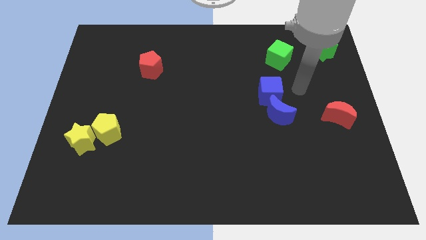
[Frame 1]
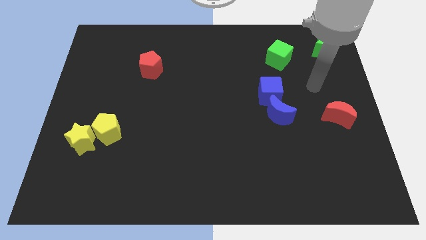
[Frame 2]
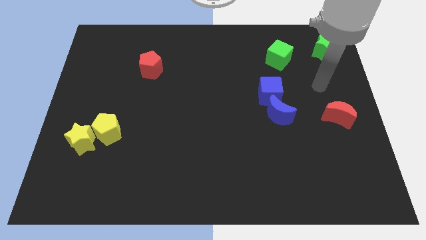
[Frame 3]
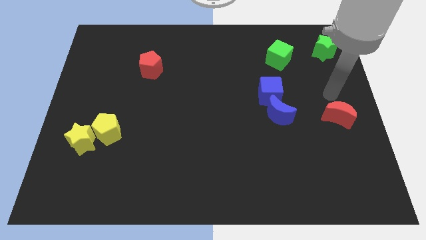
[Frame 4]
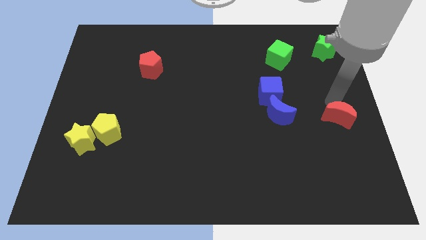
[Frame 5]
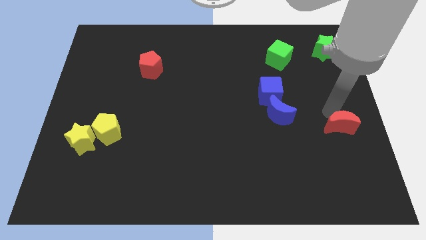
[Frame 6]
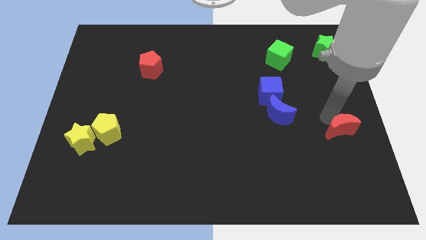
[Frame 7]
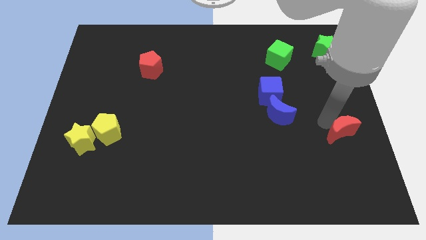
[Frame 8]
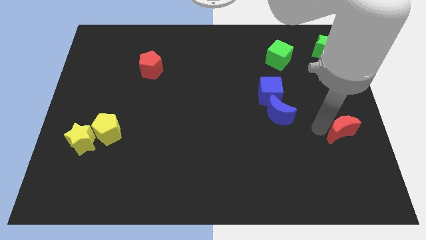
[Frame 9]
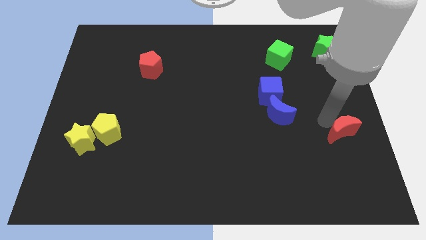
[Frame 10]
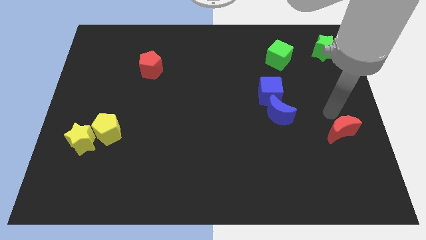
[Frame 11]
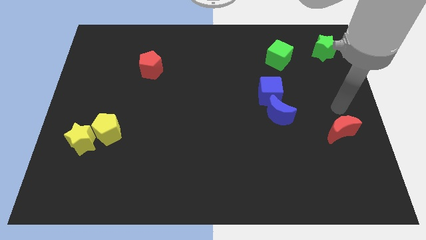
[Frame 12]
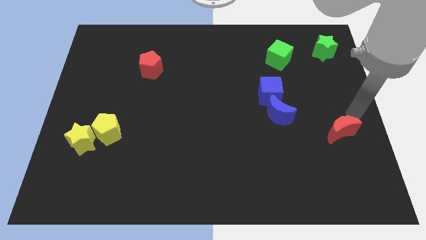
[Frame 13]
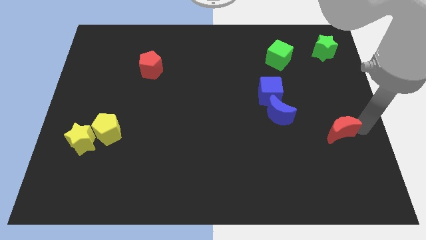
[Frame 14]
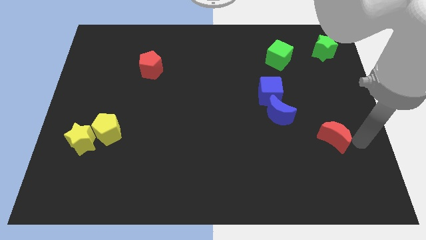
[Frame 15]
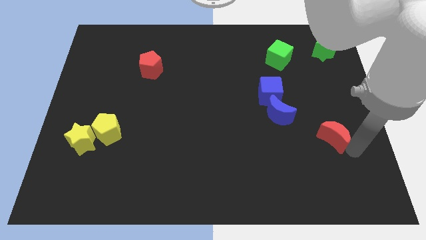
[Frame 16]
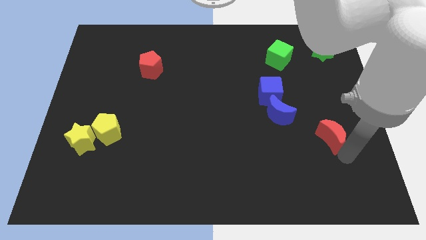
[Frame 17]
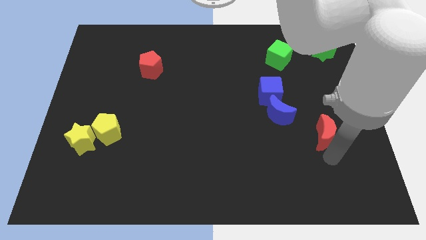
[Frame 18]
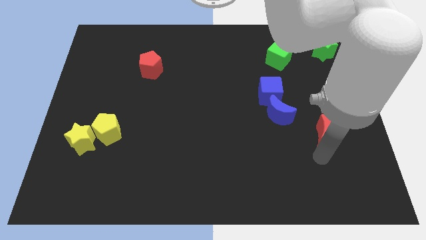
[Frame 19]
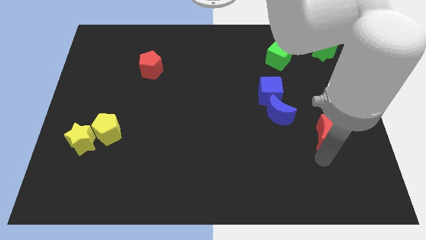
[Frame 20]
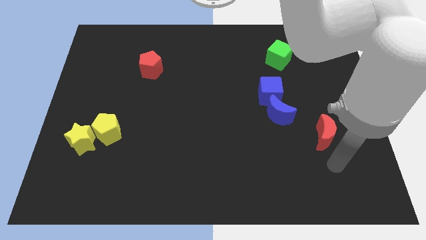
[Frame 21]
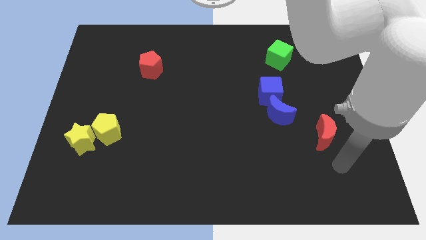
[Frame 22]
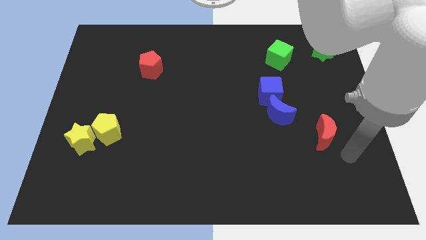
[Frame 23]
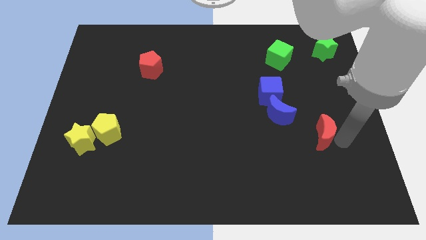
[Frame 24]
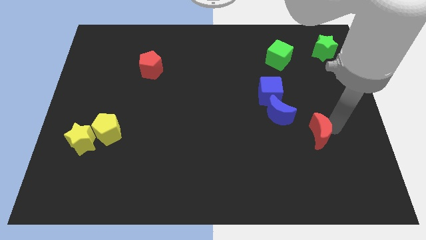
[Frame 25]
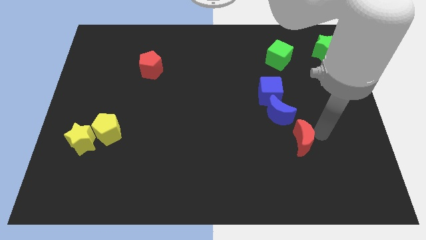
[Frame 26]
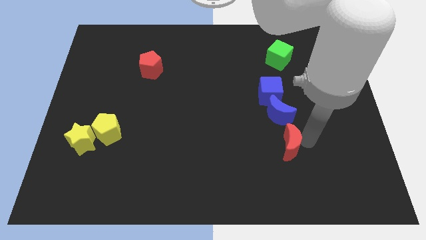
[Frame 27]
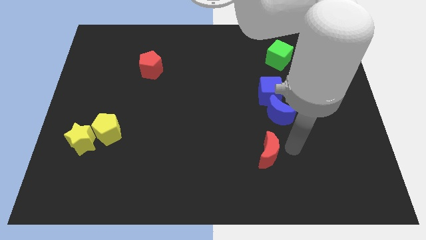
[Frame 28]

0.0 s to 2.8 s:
move the red crescent to the bottom of the blue crescent

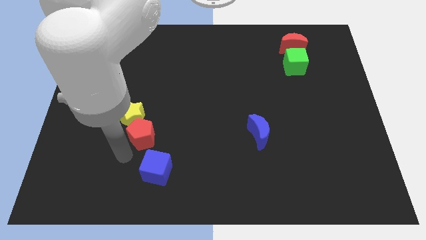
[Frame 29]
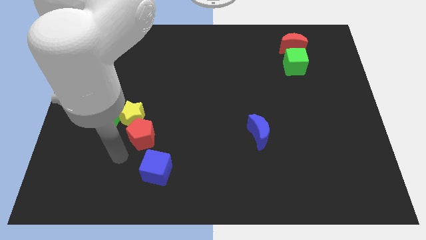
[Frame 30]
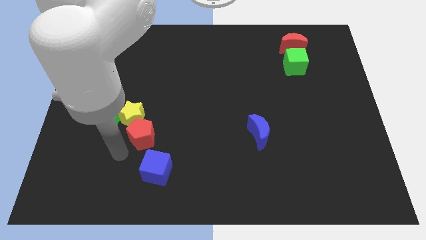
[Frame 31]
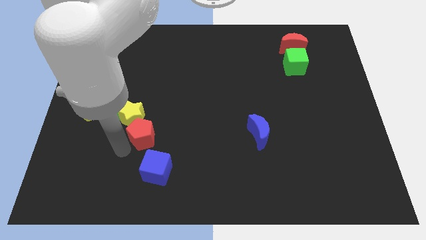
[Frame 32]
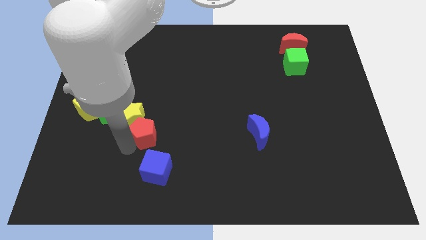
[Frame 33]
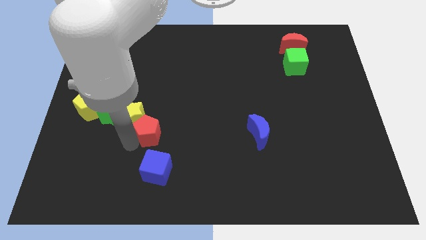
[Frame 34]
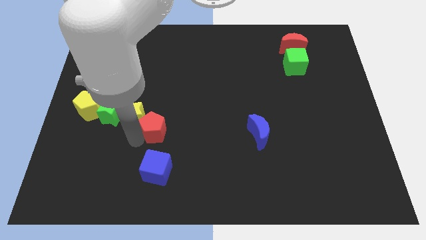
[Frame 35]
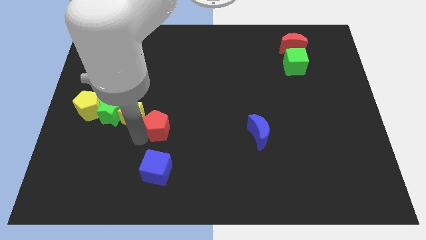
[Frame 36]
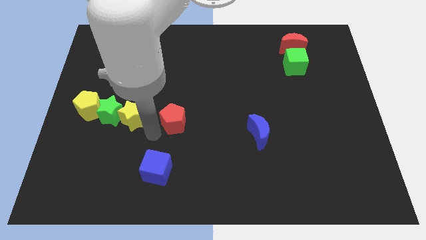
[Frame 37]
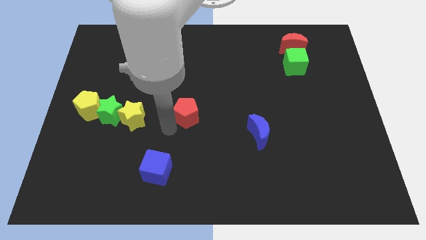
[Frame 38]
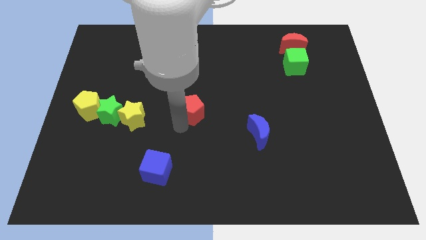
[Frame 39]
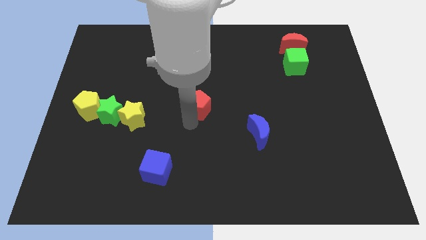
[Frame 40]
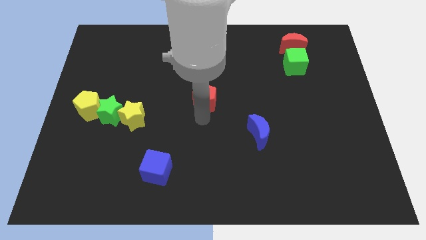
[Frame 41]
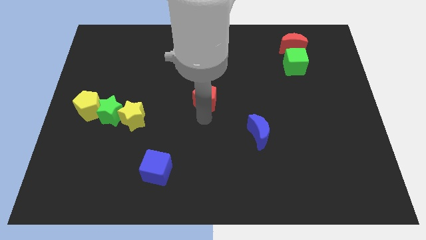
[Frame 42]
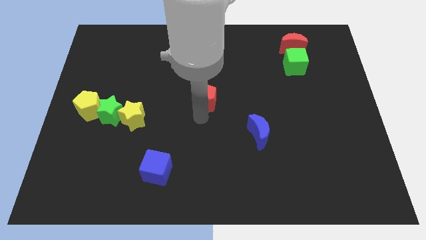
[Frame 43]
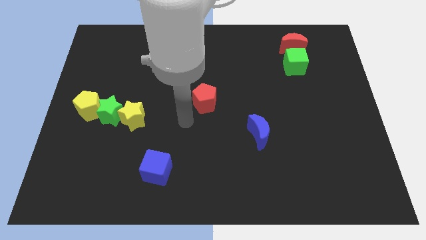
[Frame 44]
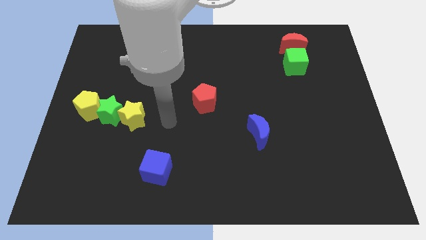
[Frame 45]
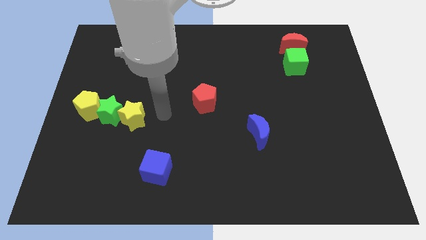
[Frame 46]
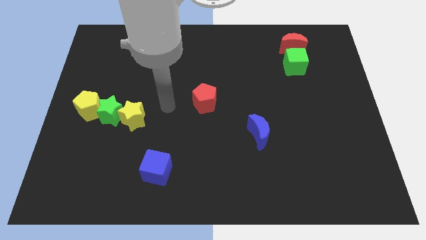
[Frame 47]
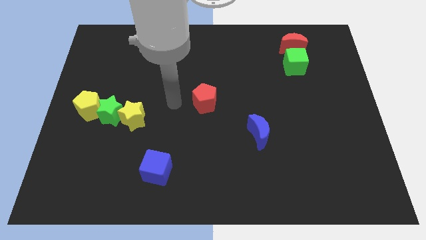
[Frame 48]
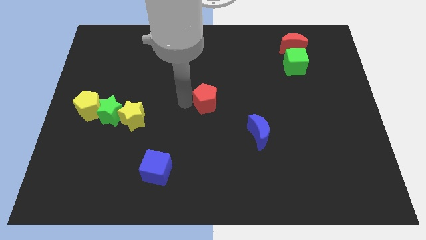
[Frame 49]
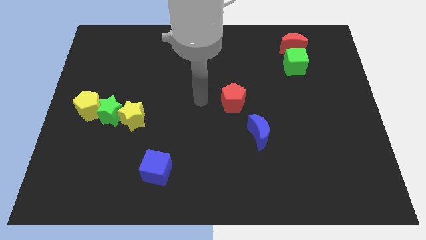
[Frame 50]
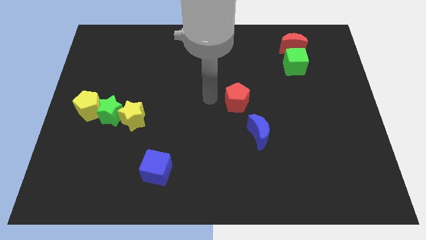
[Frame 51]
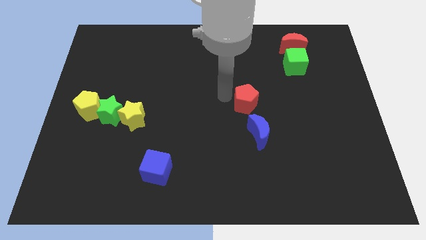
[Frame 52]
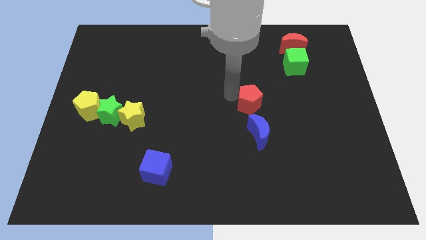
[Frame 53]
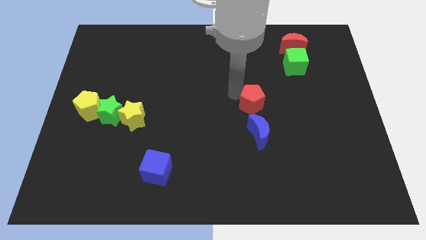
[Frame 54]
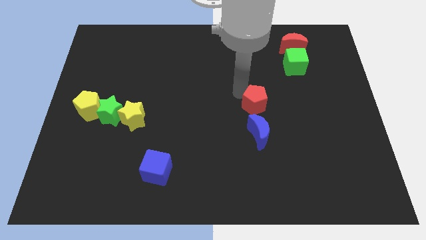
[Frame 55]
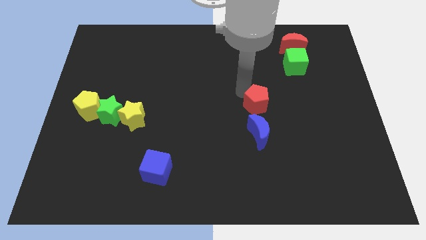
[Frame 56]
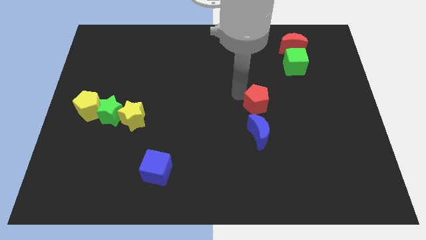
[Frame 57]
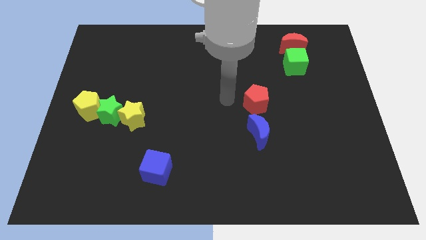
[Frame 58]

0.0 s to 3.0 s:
move the red pentagon to the top of the blue crescent

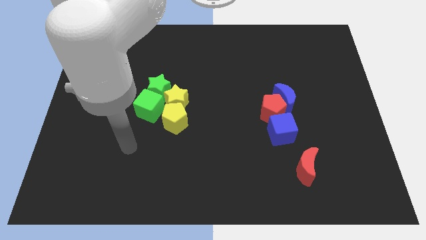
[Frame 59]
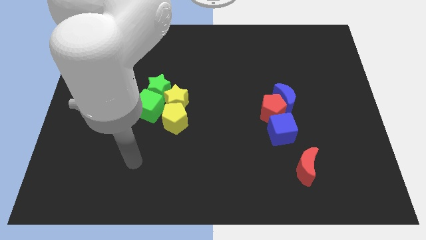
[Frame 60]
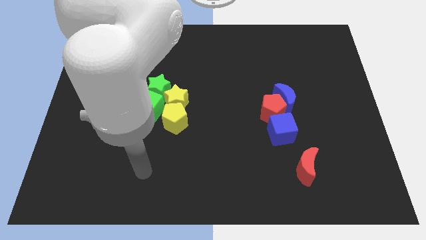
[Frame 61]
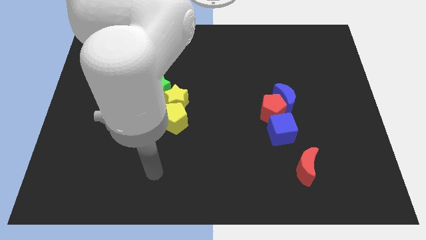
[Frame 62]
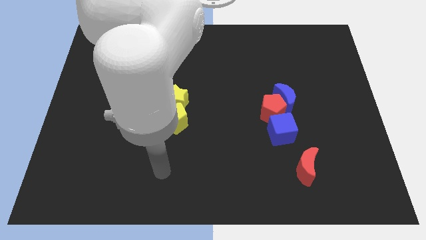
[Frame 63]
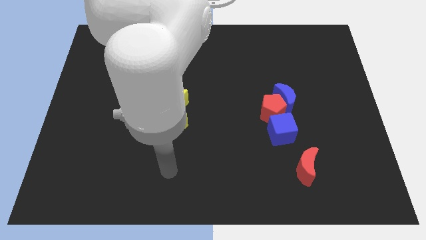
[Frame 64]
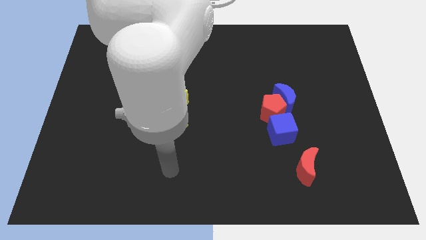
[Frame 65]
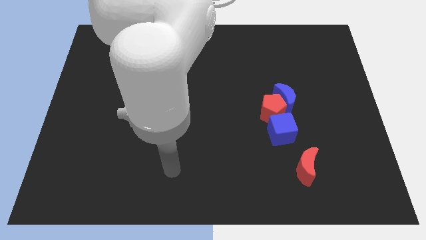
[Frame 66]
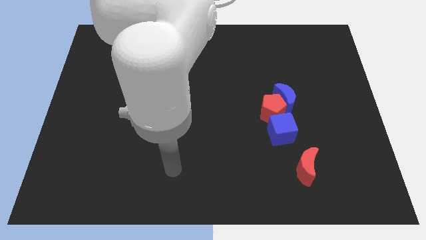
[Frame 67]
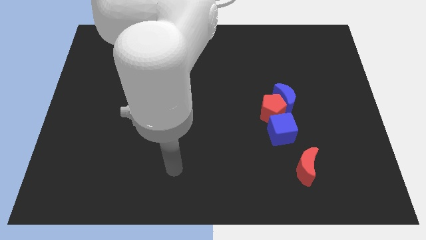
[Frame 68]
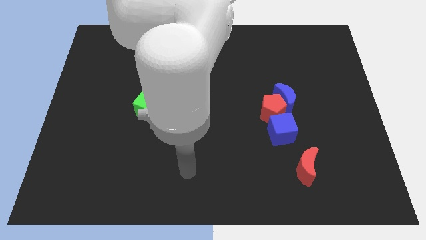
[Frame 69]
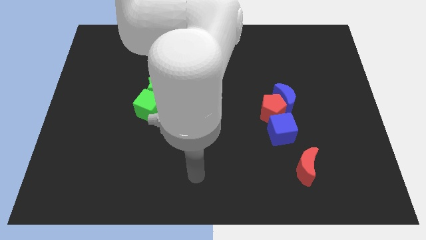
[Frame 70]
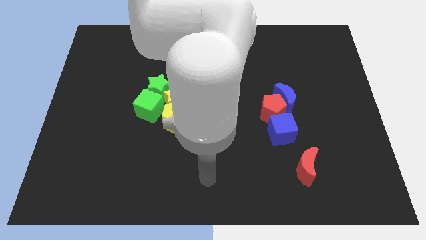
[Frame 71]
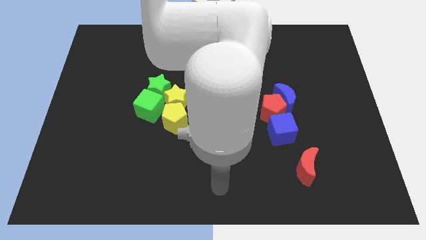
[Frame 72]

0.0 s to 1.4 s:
point your arm to the bottom center of the board

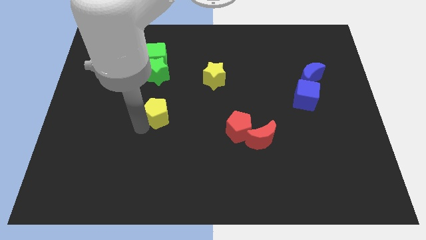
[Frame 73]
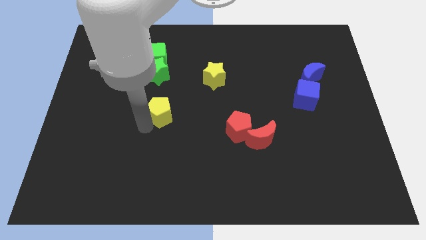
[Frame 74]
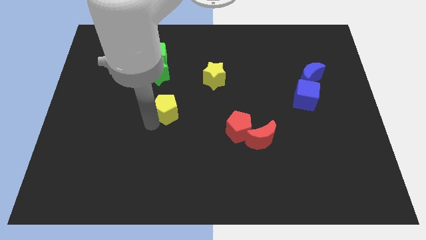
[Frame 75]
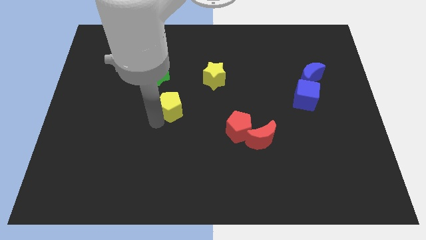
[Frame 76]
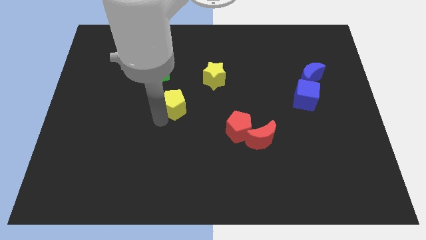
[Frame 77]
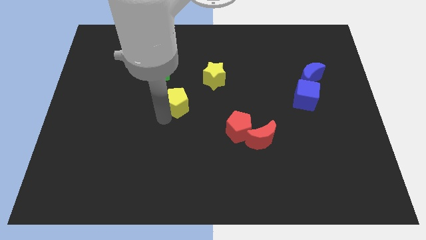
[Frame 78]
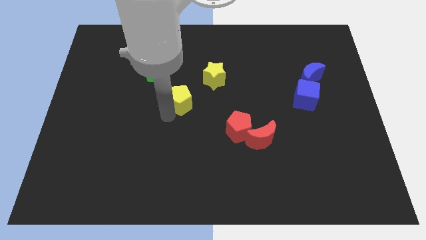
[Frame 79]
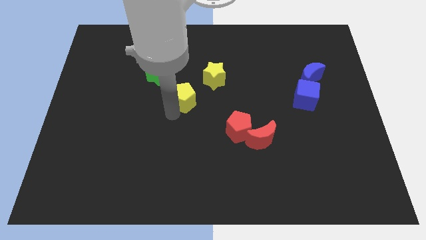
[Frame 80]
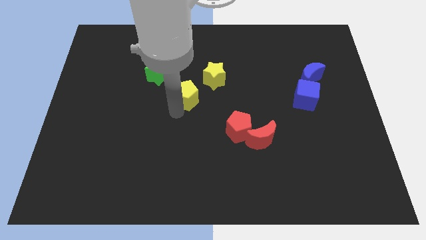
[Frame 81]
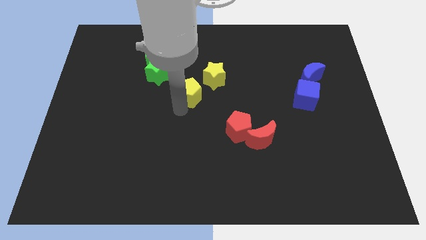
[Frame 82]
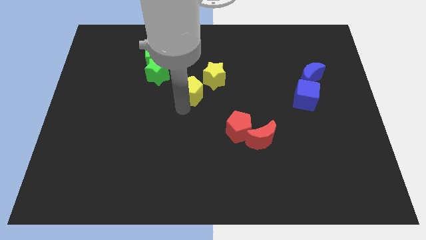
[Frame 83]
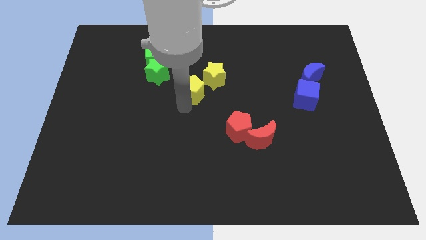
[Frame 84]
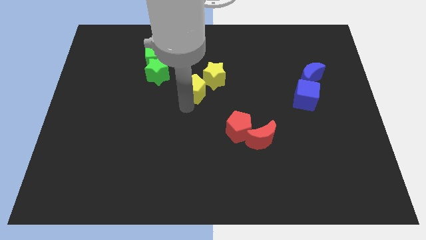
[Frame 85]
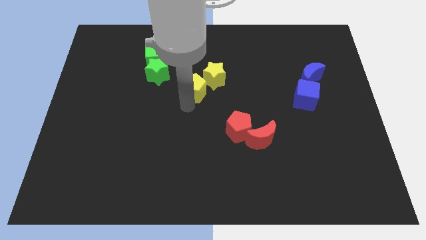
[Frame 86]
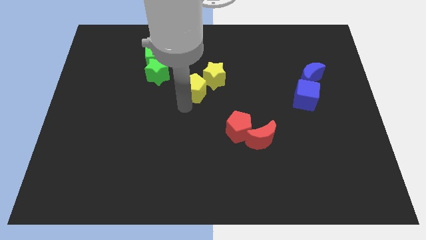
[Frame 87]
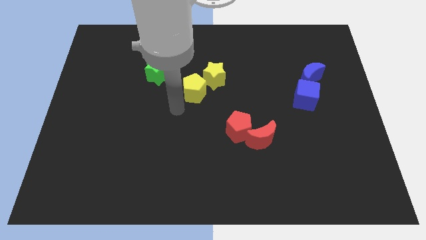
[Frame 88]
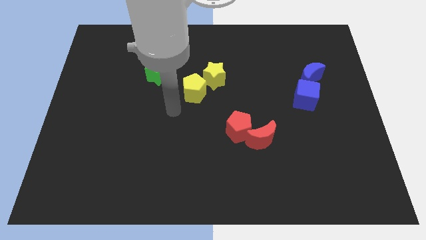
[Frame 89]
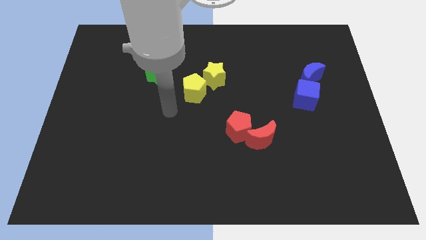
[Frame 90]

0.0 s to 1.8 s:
move the yellow pentagon towards the center of the board

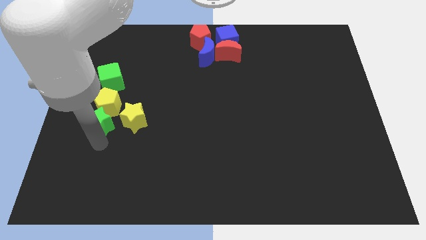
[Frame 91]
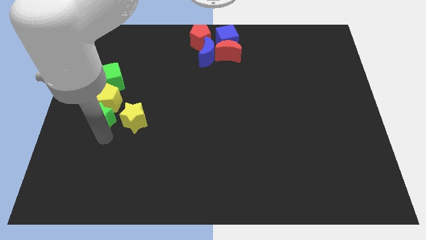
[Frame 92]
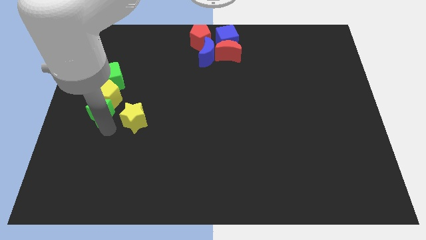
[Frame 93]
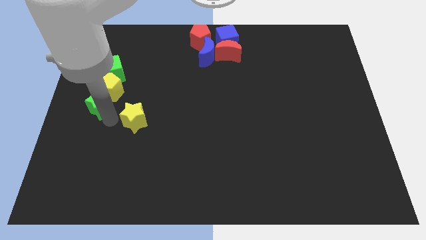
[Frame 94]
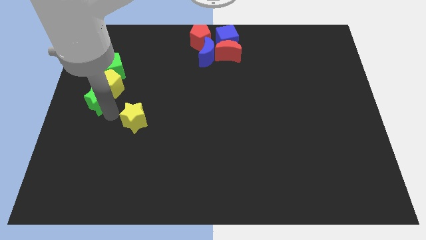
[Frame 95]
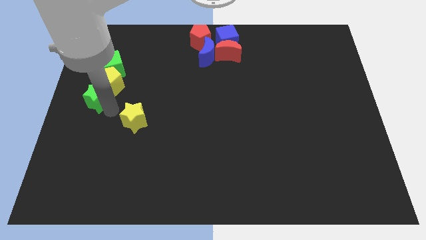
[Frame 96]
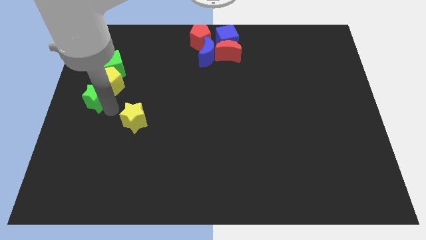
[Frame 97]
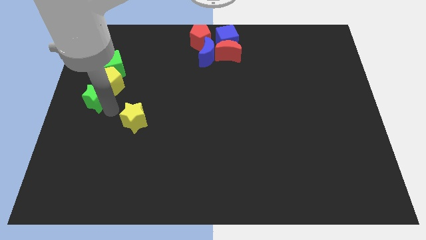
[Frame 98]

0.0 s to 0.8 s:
move the green star slightly up
